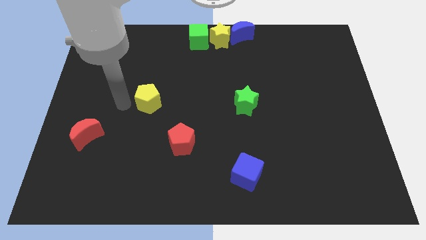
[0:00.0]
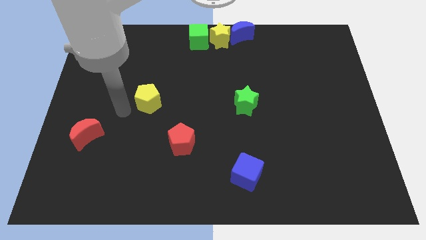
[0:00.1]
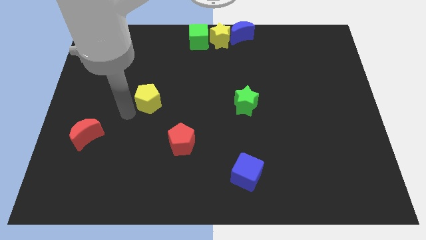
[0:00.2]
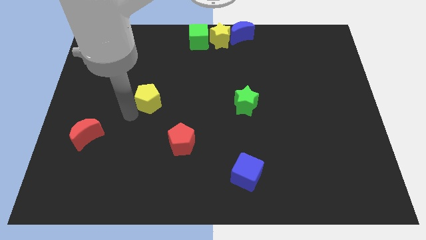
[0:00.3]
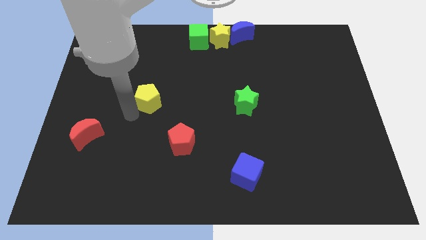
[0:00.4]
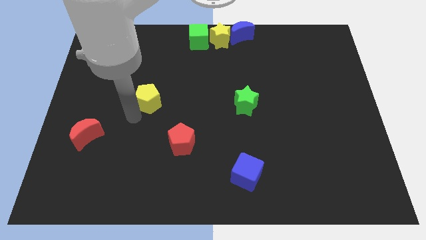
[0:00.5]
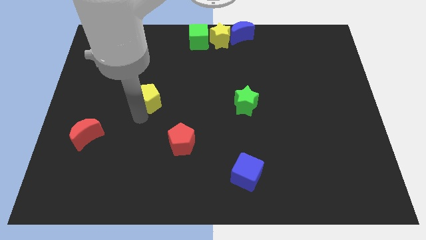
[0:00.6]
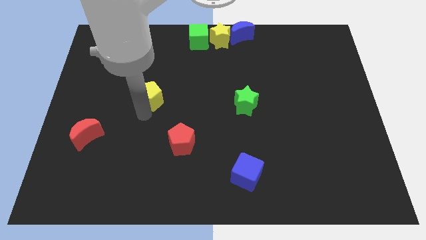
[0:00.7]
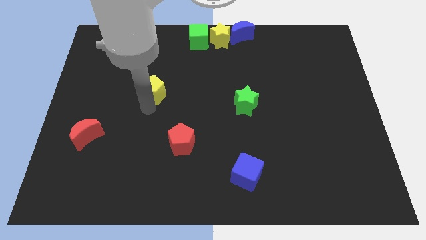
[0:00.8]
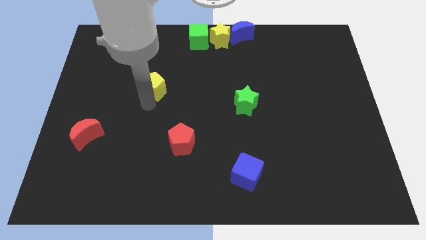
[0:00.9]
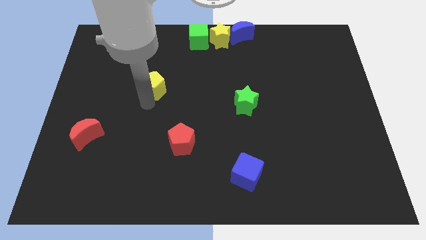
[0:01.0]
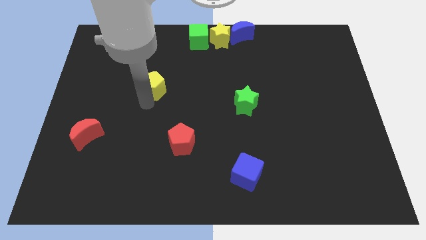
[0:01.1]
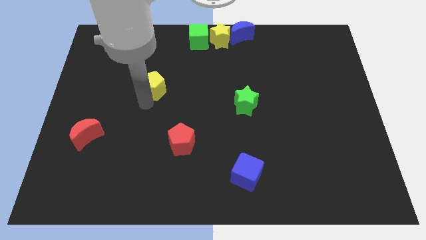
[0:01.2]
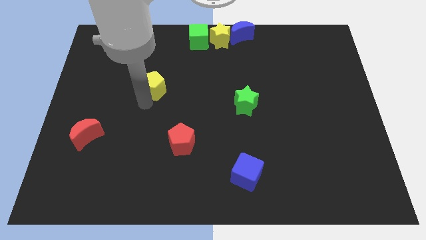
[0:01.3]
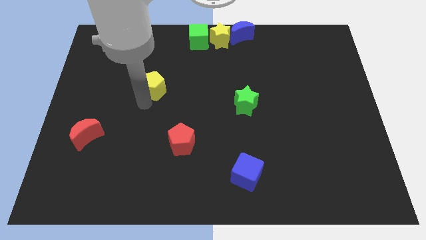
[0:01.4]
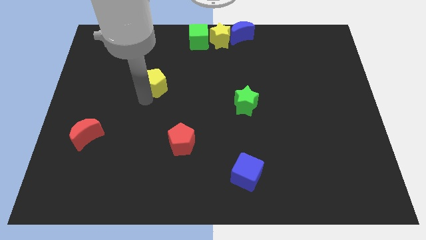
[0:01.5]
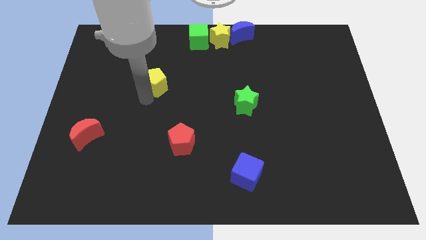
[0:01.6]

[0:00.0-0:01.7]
push yellow pentagon slightly upwards

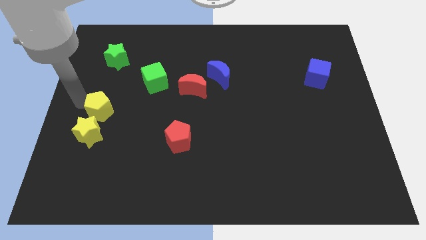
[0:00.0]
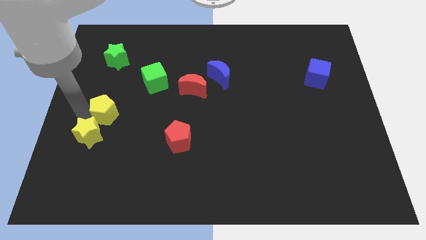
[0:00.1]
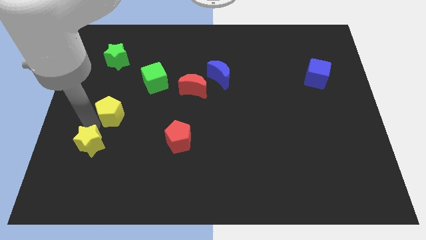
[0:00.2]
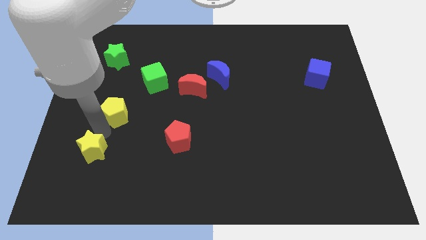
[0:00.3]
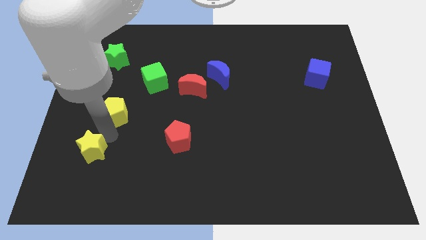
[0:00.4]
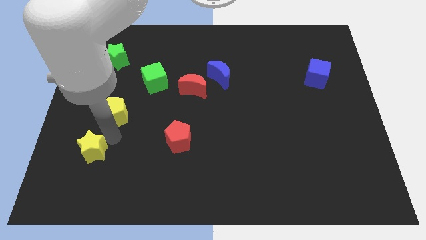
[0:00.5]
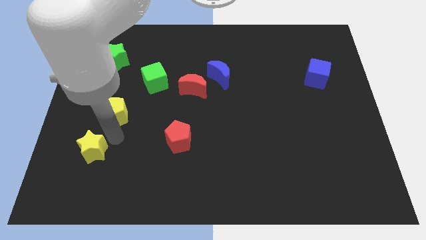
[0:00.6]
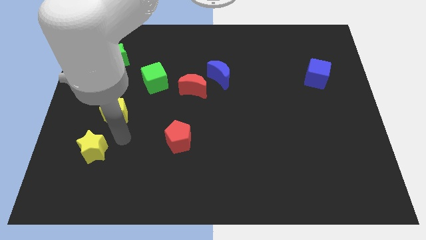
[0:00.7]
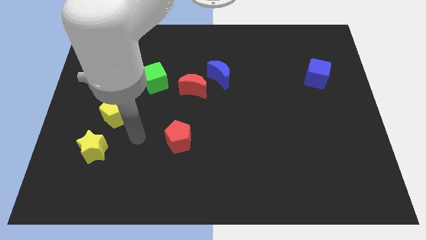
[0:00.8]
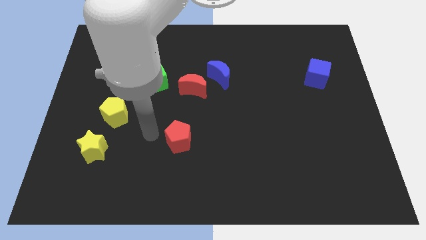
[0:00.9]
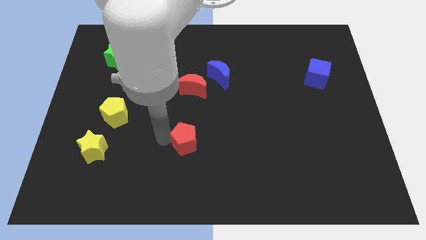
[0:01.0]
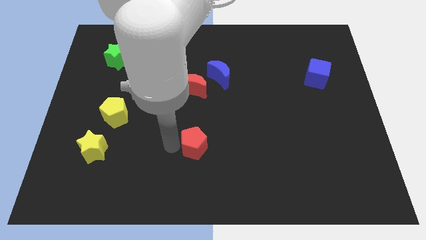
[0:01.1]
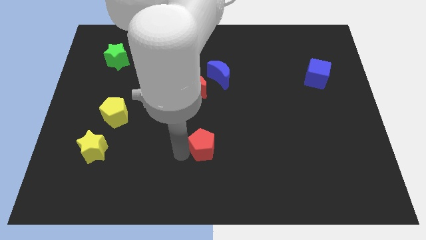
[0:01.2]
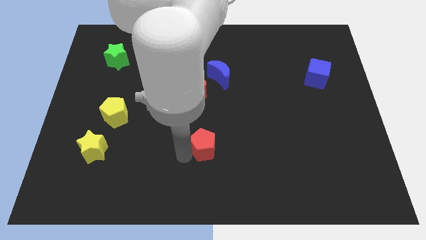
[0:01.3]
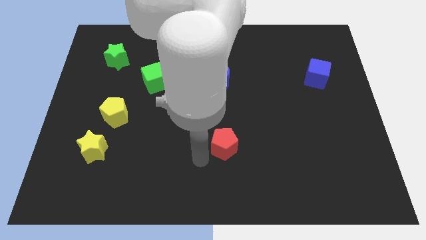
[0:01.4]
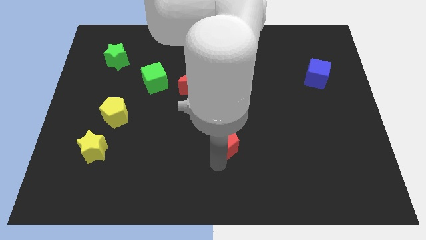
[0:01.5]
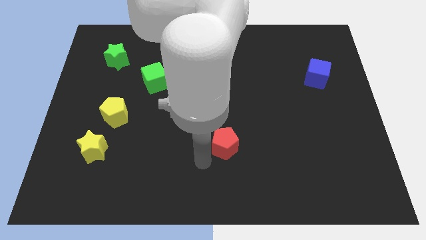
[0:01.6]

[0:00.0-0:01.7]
separate the two yellow blocks

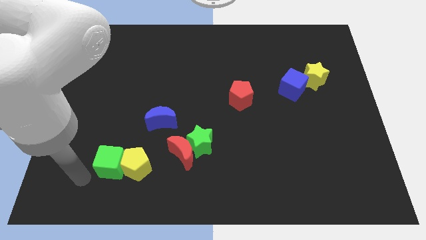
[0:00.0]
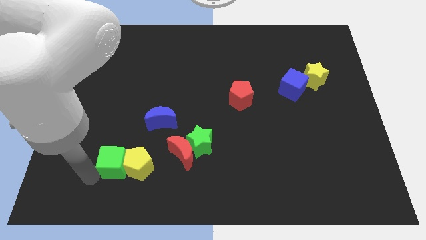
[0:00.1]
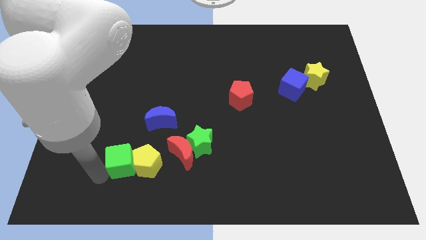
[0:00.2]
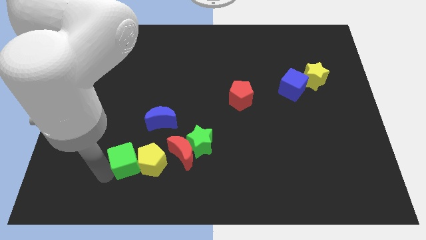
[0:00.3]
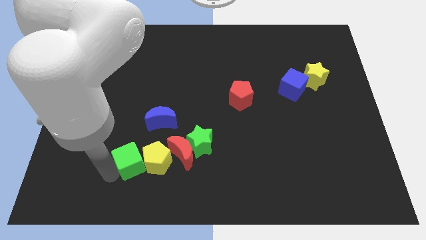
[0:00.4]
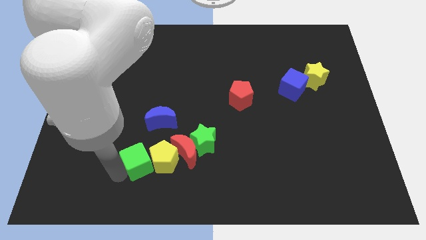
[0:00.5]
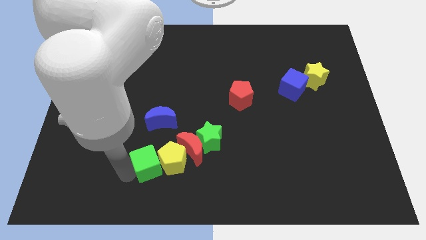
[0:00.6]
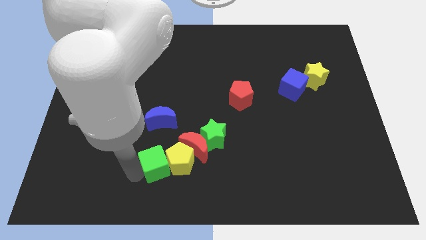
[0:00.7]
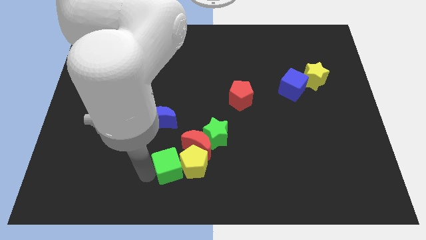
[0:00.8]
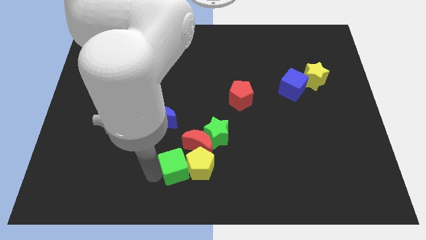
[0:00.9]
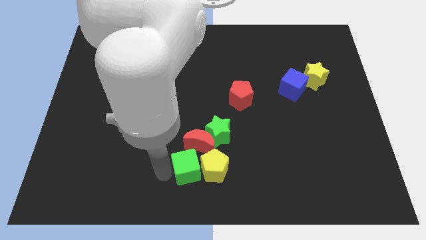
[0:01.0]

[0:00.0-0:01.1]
push the green cube along with the yellow pentagon to the bottom of the red crescent

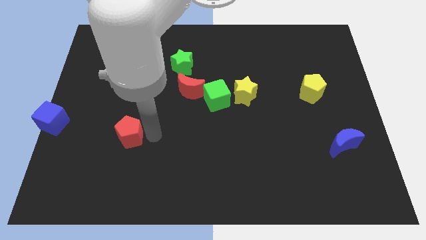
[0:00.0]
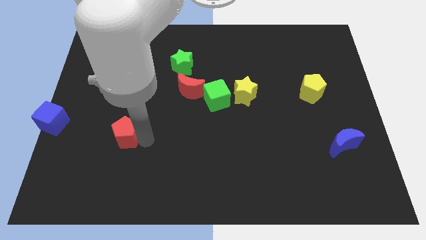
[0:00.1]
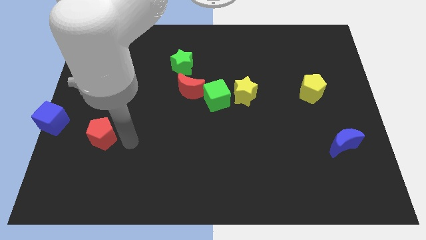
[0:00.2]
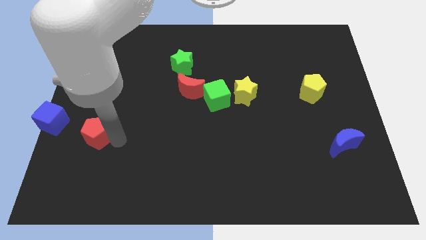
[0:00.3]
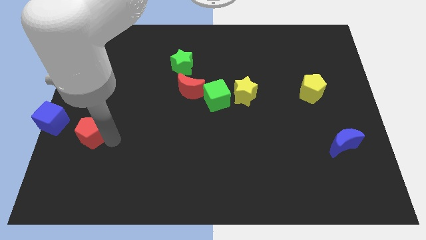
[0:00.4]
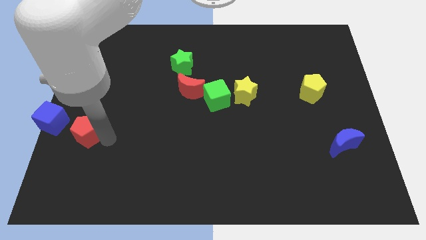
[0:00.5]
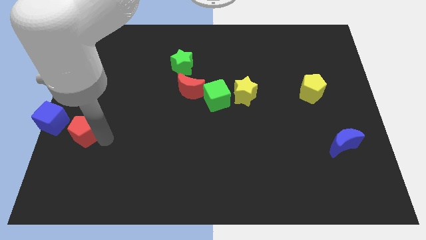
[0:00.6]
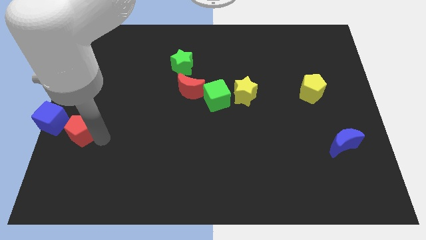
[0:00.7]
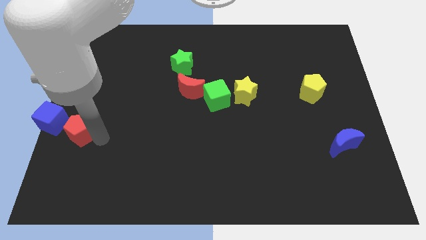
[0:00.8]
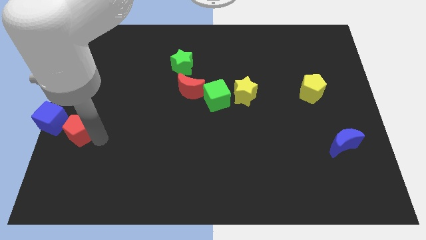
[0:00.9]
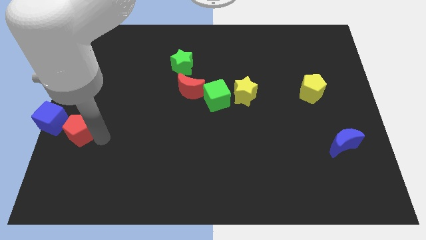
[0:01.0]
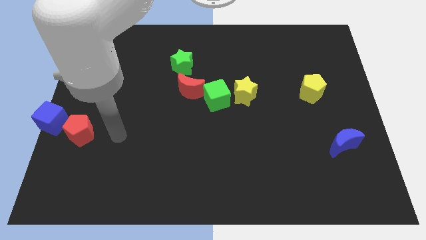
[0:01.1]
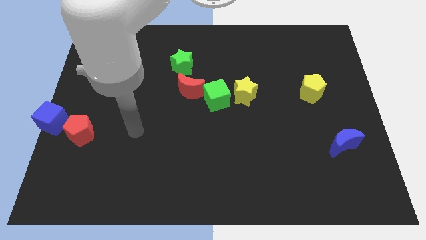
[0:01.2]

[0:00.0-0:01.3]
move red pentagon close to blue cube

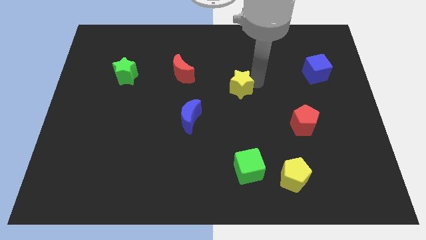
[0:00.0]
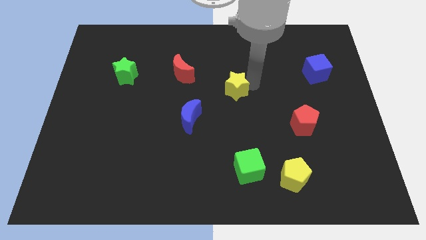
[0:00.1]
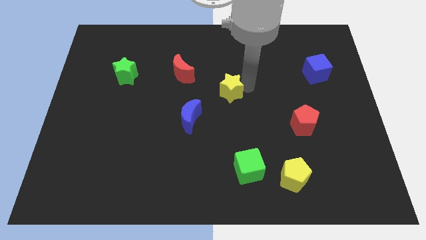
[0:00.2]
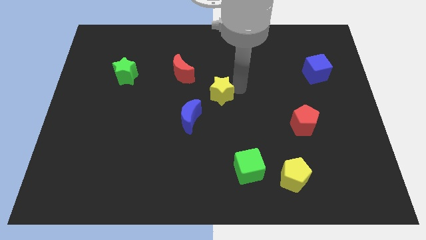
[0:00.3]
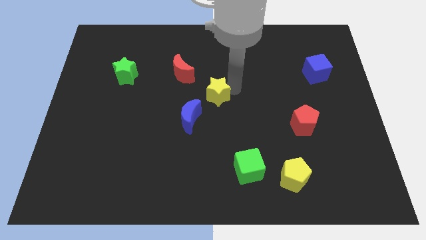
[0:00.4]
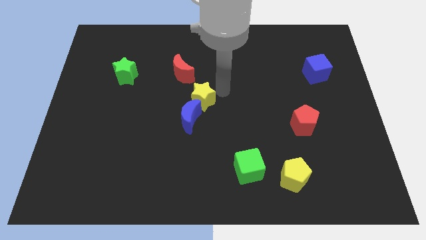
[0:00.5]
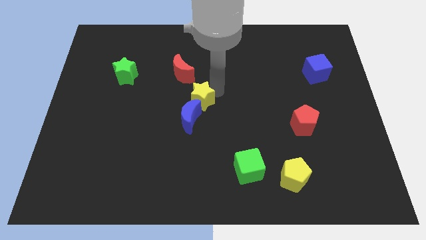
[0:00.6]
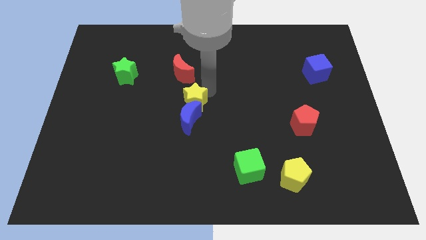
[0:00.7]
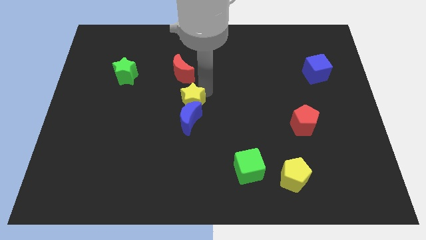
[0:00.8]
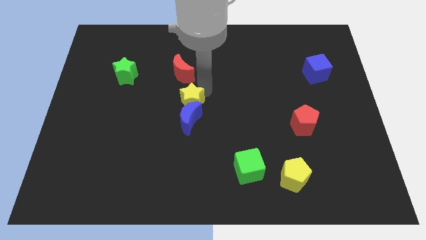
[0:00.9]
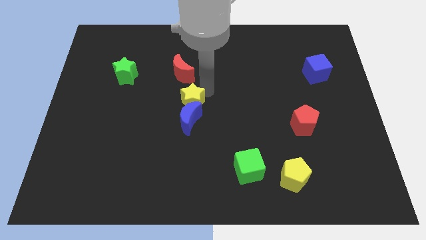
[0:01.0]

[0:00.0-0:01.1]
move the yellow star close to the blue crescent

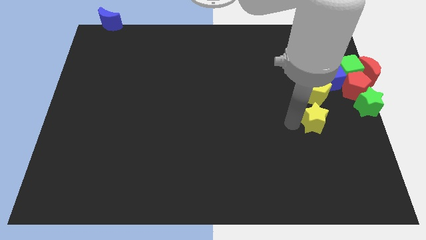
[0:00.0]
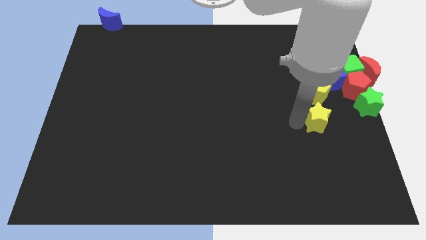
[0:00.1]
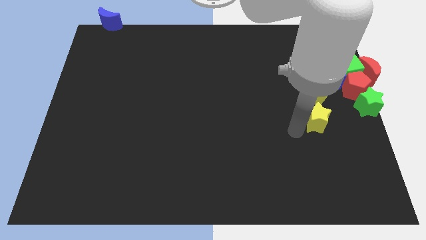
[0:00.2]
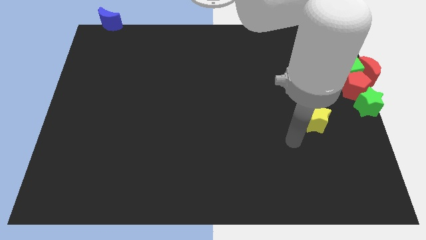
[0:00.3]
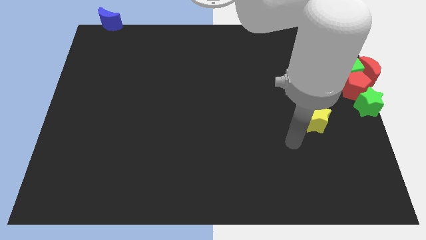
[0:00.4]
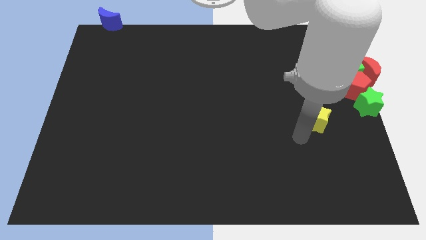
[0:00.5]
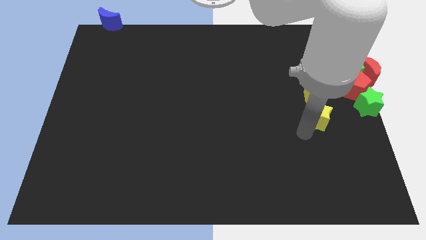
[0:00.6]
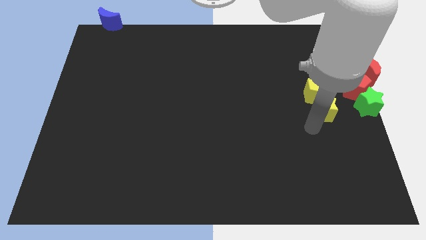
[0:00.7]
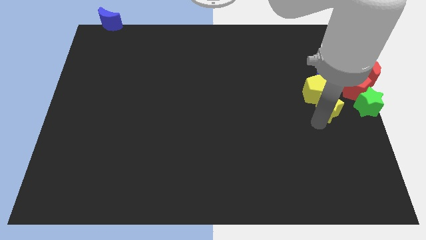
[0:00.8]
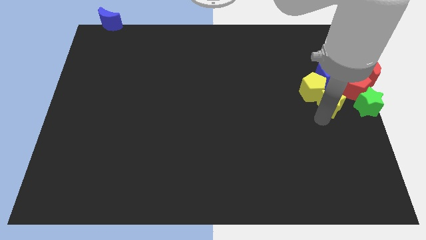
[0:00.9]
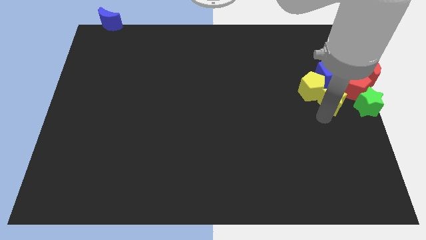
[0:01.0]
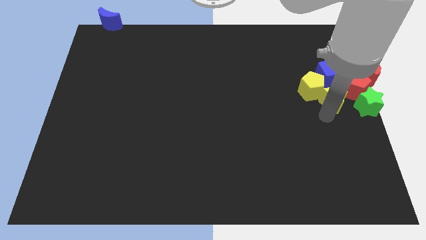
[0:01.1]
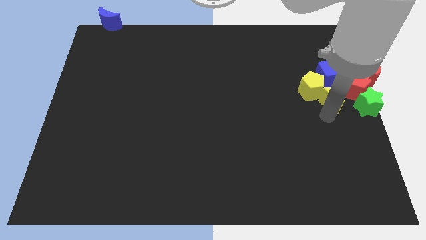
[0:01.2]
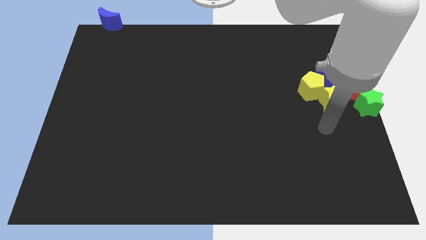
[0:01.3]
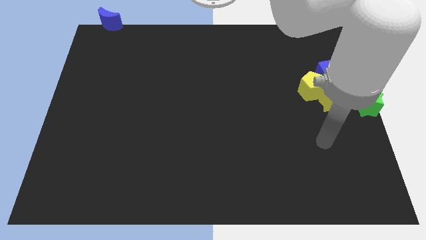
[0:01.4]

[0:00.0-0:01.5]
place the yellow star left to the red pentagon

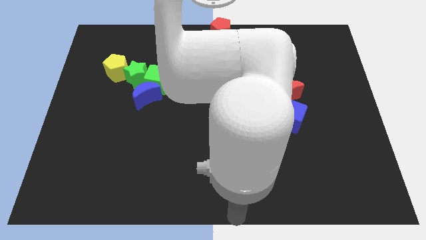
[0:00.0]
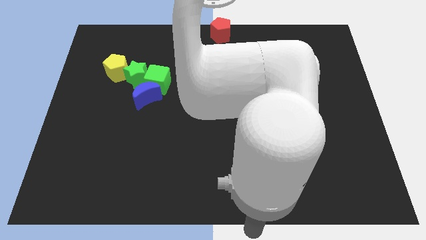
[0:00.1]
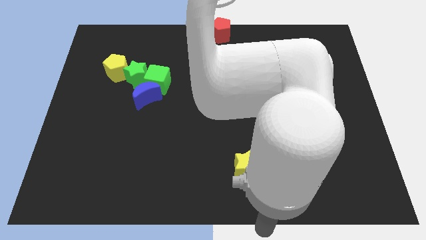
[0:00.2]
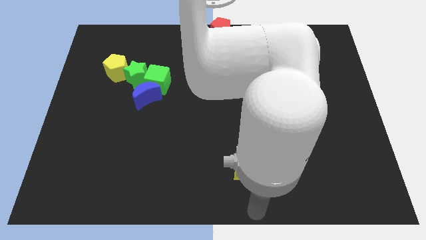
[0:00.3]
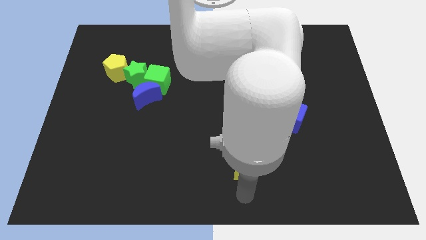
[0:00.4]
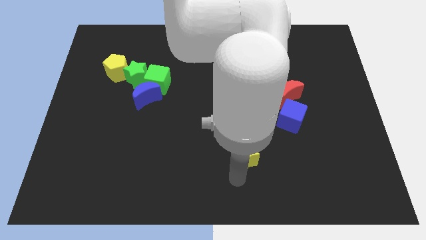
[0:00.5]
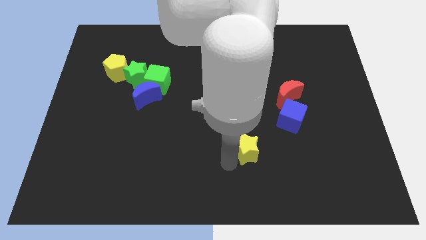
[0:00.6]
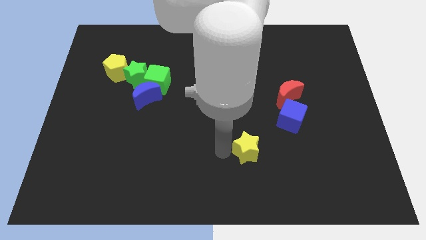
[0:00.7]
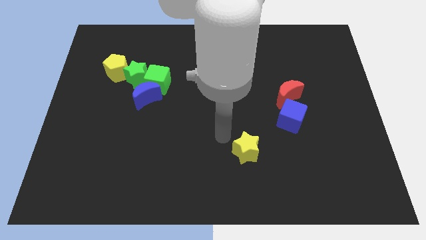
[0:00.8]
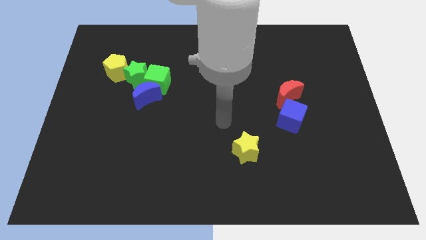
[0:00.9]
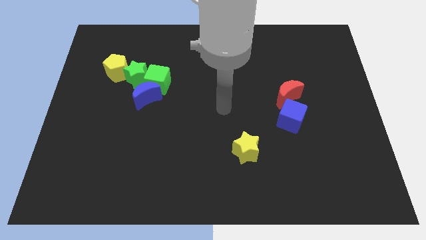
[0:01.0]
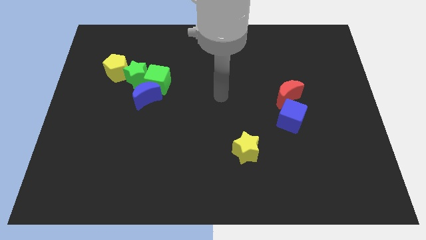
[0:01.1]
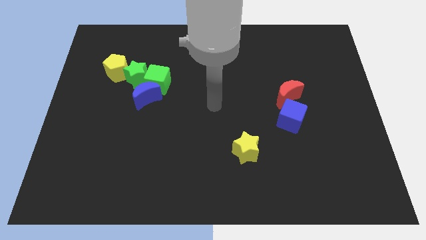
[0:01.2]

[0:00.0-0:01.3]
push the yellow star upward
